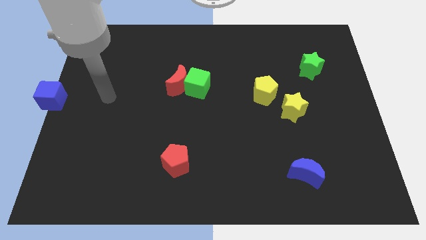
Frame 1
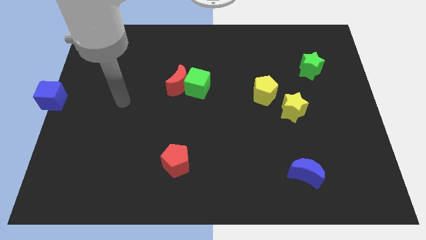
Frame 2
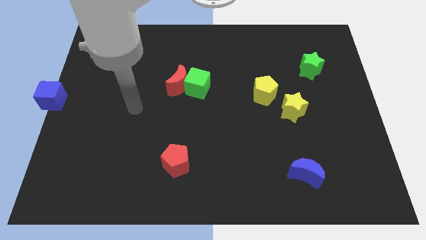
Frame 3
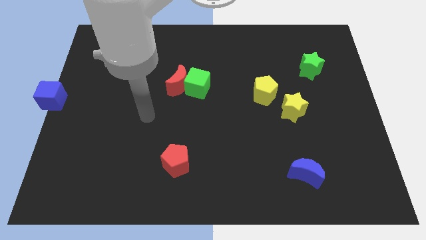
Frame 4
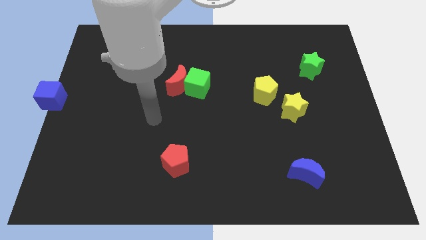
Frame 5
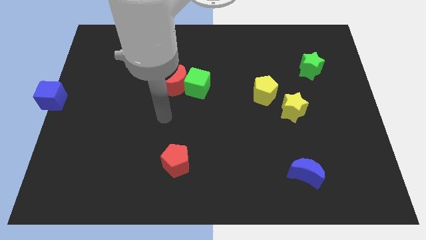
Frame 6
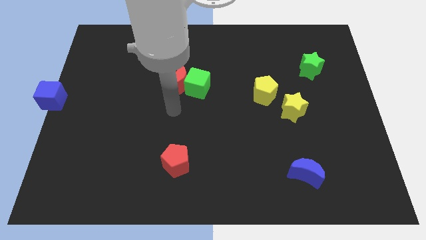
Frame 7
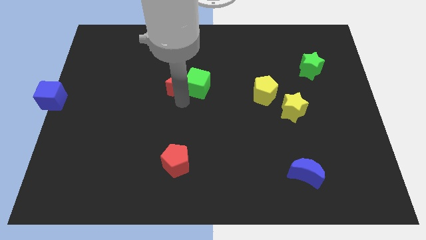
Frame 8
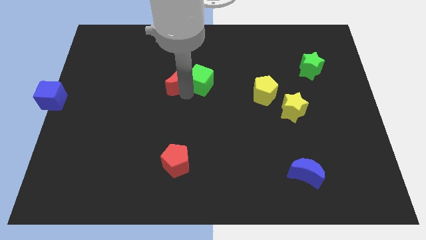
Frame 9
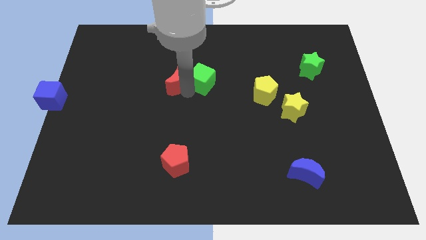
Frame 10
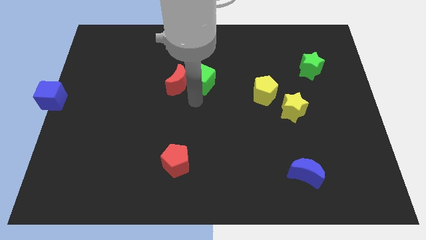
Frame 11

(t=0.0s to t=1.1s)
slightly push the green cube

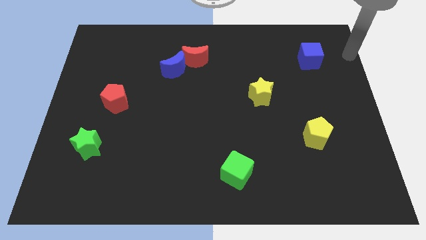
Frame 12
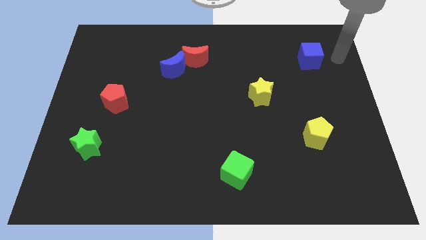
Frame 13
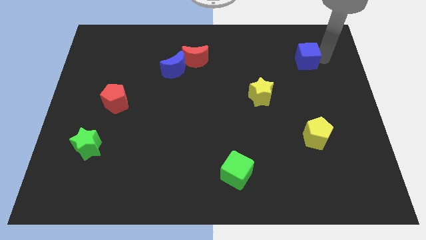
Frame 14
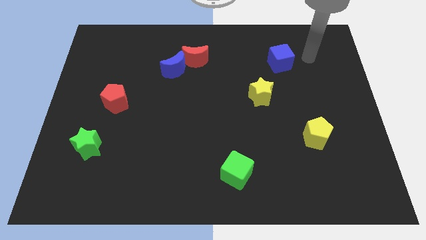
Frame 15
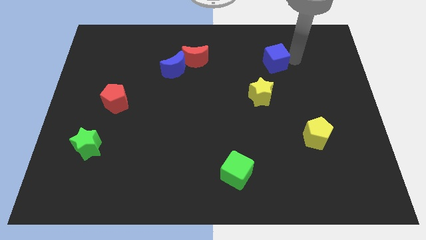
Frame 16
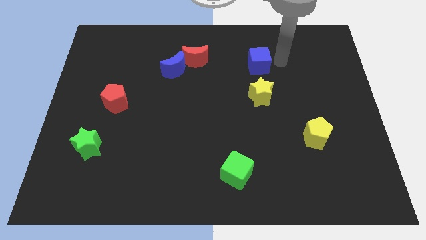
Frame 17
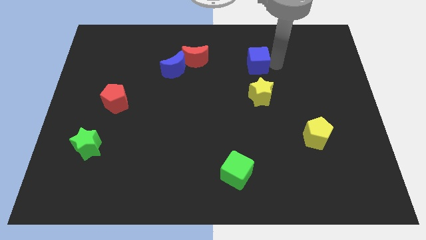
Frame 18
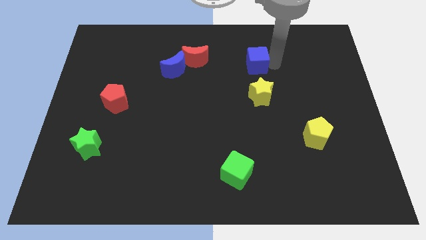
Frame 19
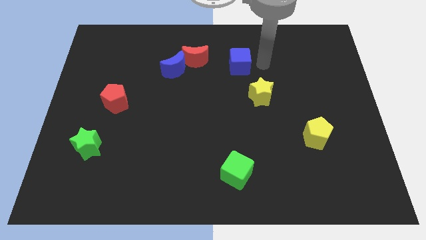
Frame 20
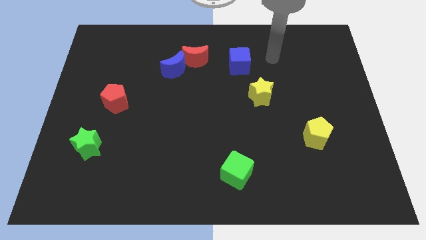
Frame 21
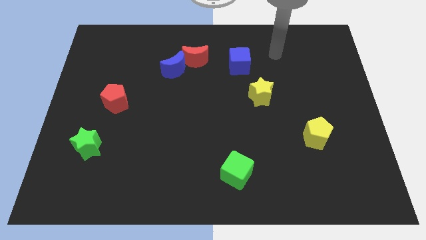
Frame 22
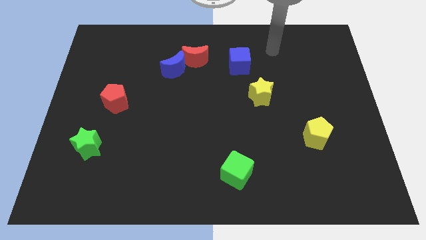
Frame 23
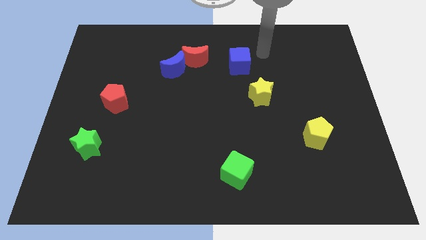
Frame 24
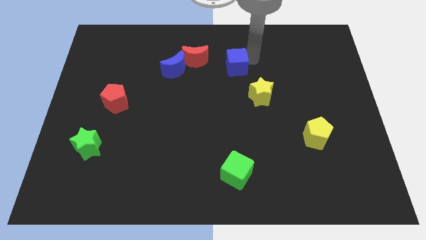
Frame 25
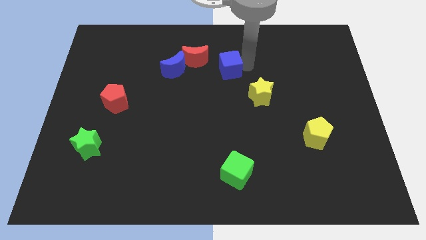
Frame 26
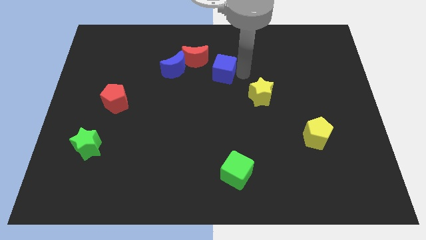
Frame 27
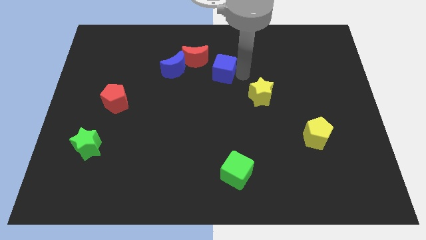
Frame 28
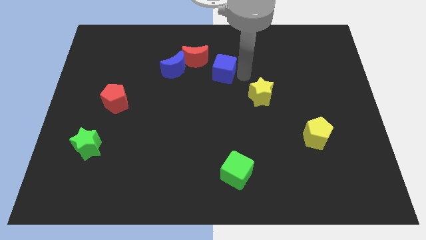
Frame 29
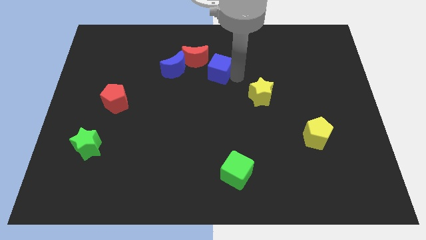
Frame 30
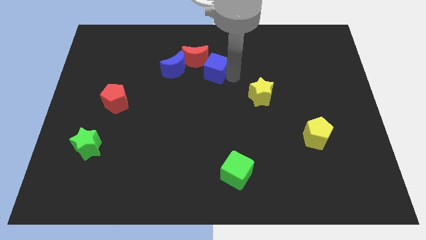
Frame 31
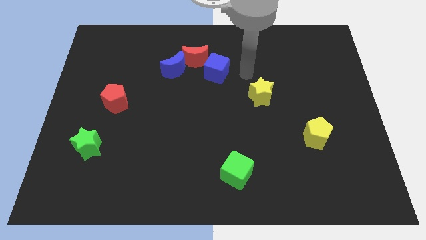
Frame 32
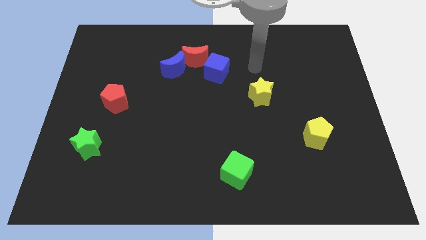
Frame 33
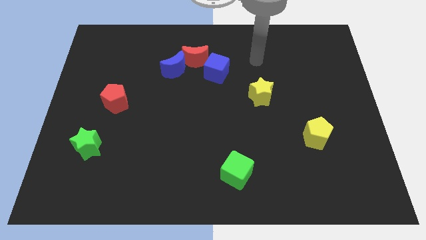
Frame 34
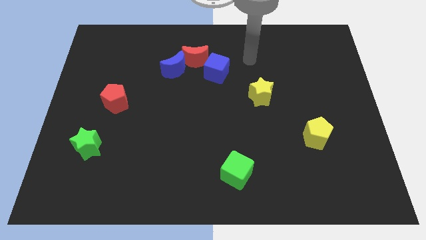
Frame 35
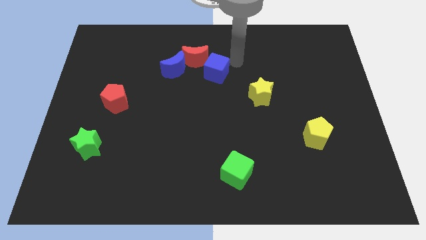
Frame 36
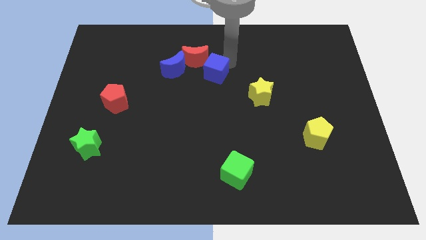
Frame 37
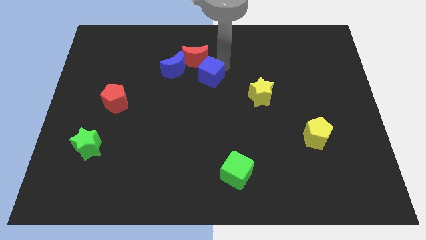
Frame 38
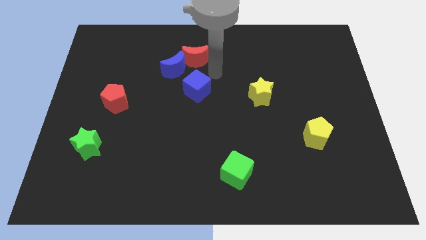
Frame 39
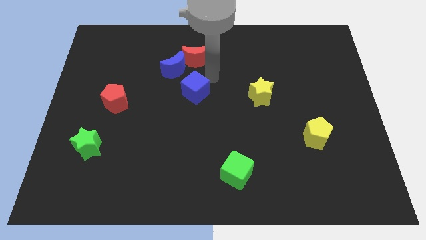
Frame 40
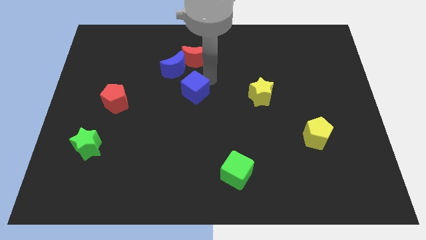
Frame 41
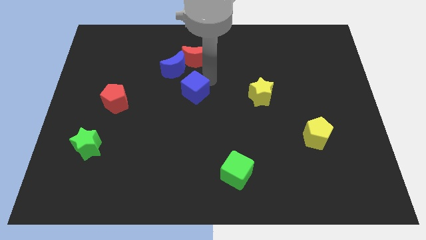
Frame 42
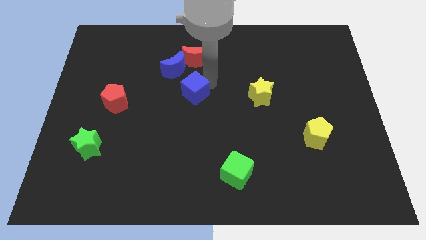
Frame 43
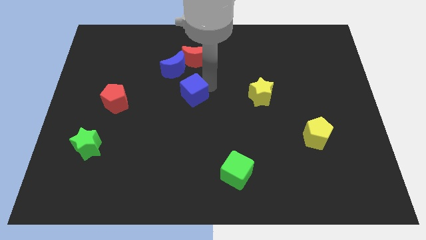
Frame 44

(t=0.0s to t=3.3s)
place the blue cube vertically below the red crescent

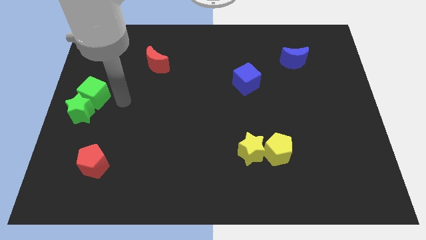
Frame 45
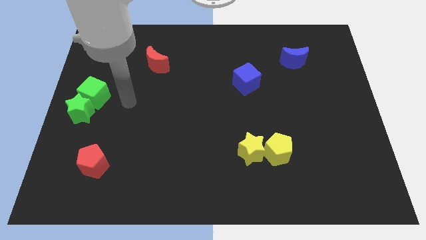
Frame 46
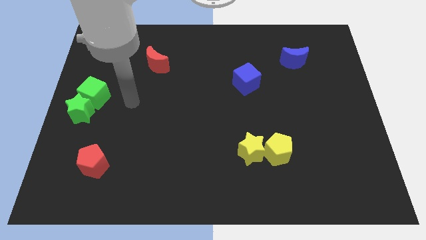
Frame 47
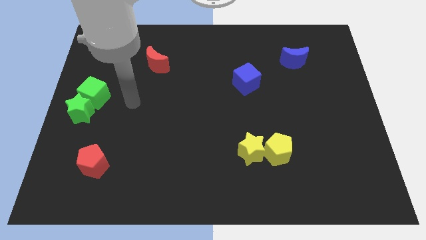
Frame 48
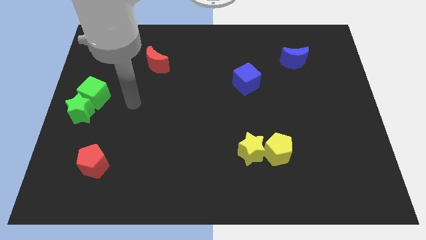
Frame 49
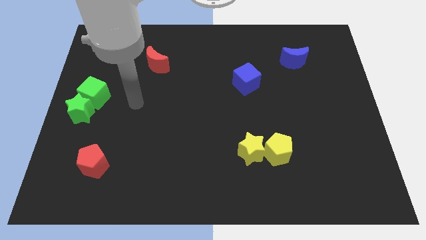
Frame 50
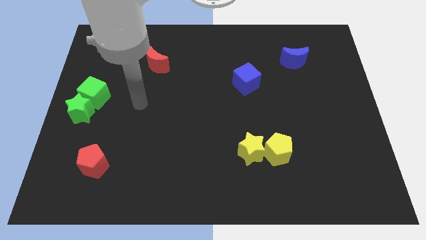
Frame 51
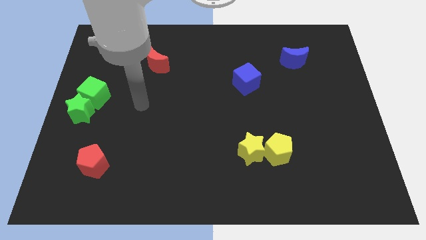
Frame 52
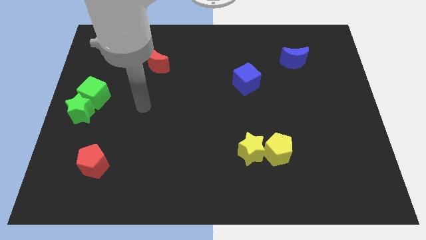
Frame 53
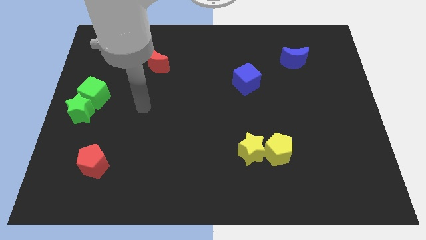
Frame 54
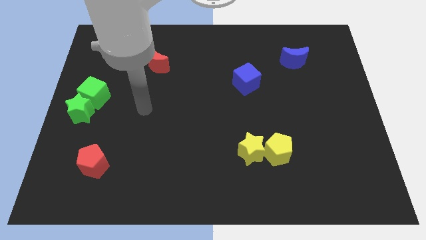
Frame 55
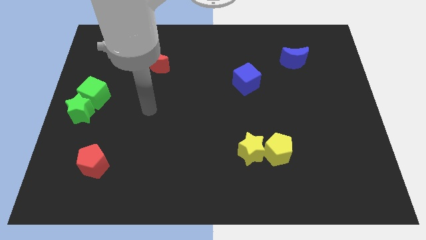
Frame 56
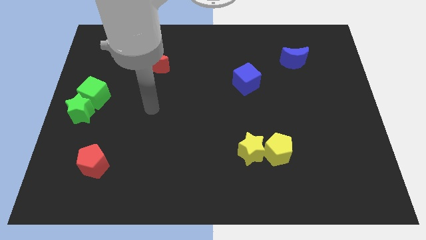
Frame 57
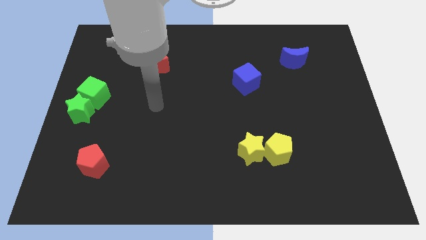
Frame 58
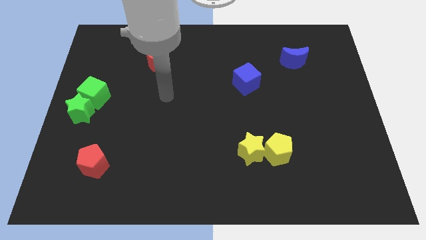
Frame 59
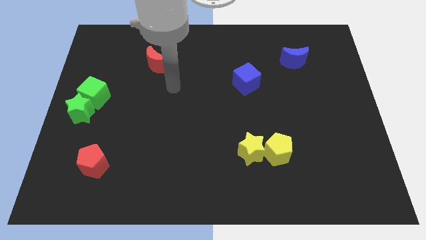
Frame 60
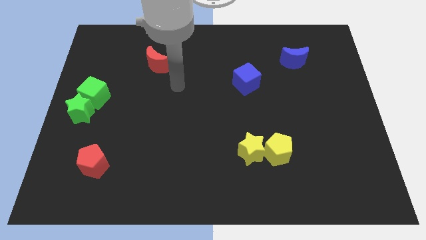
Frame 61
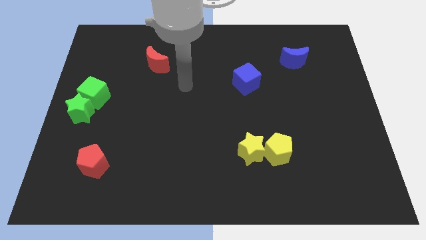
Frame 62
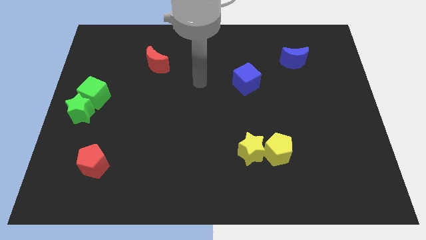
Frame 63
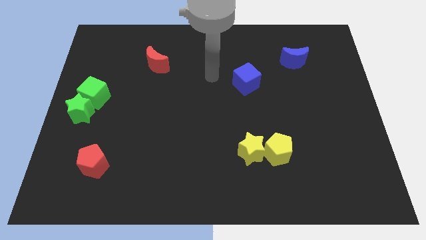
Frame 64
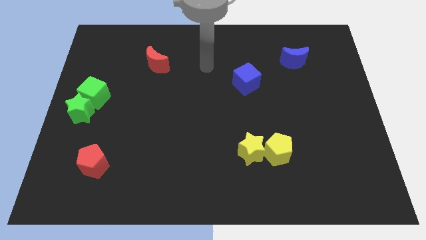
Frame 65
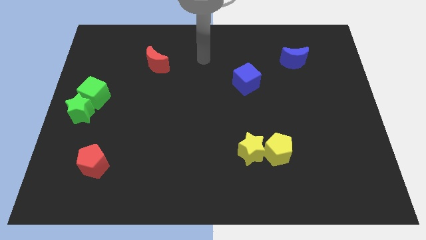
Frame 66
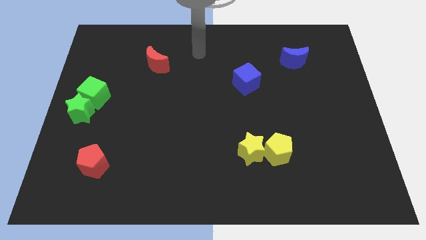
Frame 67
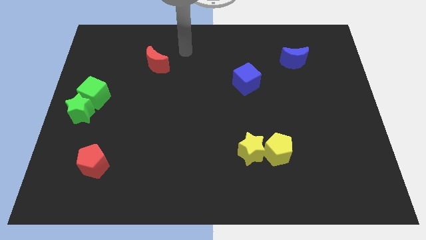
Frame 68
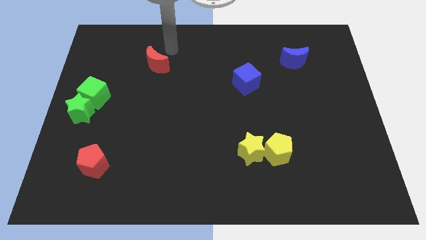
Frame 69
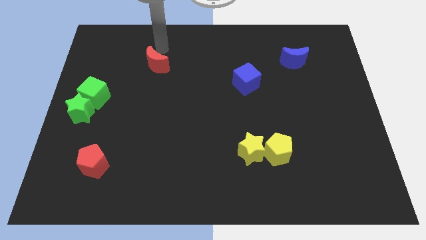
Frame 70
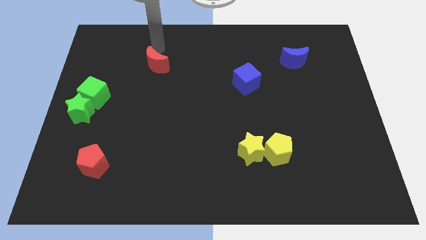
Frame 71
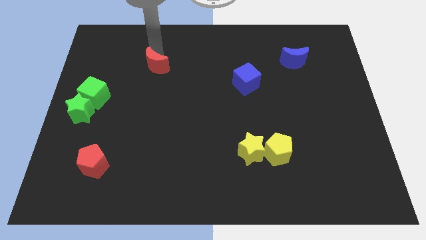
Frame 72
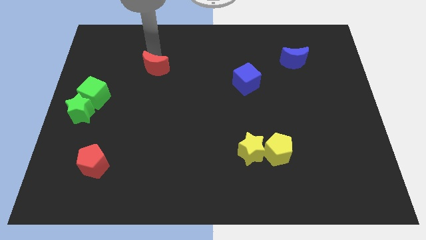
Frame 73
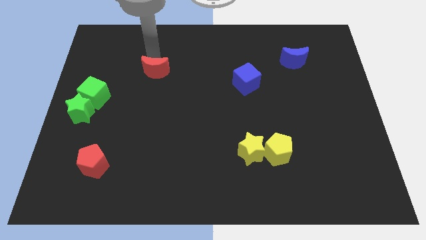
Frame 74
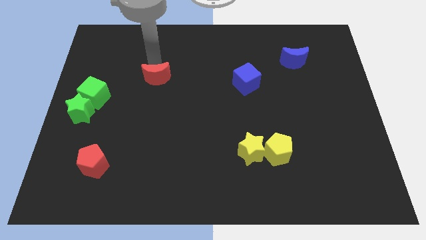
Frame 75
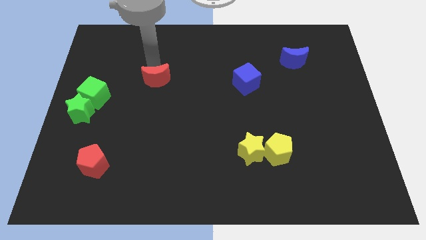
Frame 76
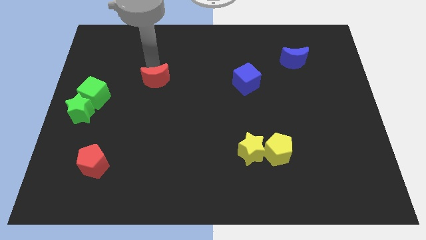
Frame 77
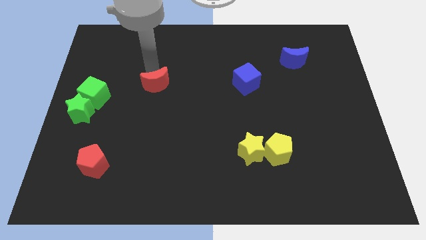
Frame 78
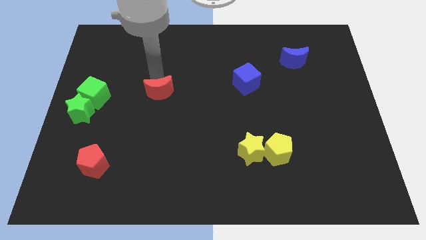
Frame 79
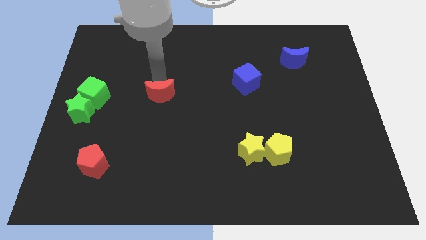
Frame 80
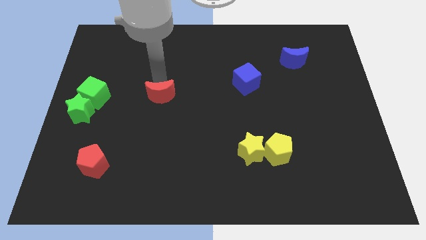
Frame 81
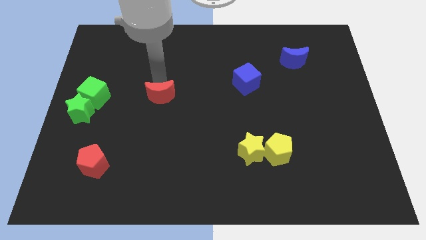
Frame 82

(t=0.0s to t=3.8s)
place the red moon in between the green cube and the blue cube

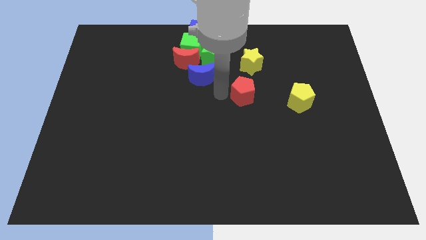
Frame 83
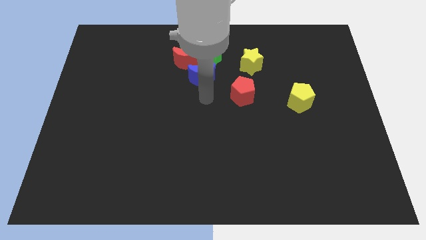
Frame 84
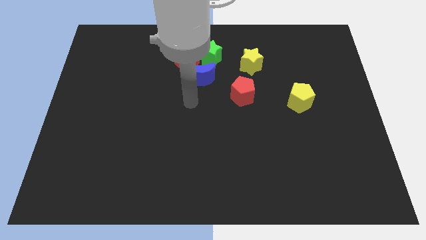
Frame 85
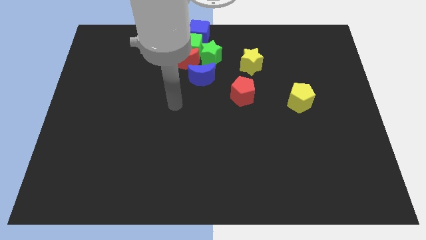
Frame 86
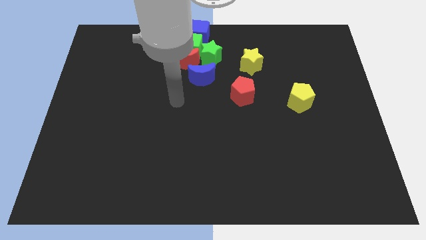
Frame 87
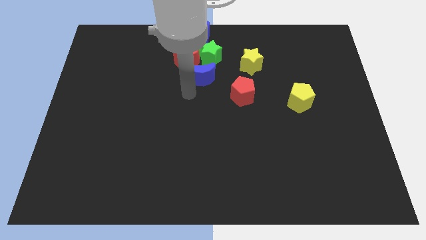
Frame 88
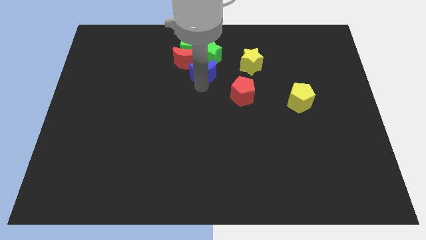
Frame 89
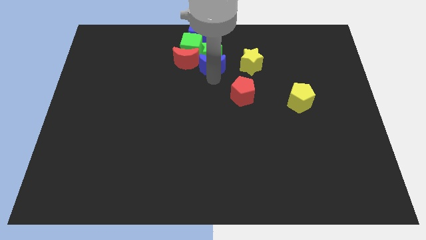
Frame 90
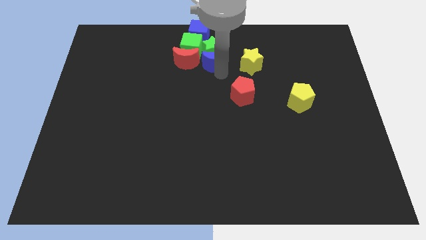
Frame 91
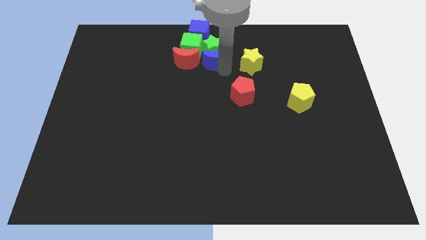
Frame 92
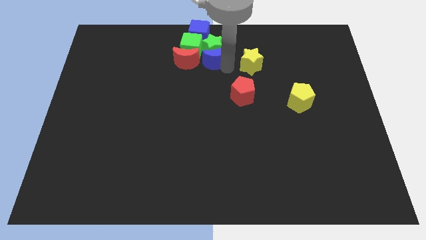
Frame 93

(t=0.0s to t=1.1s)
move the blue crescent to the right of the red crescent
